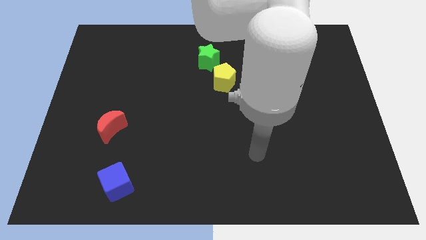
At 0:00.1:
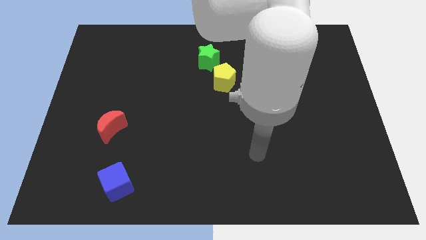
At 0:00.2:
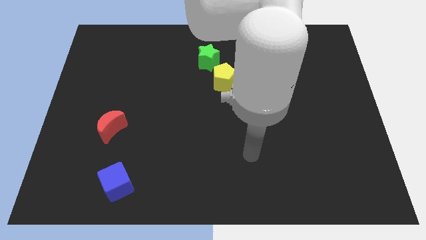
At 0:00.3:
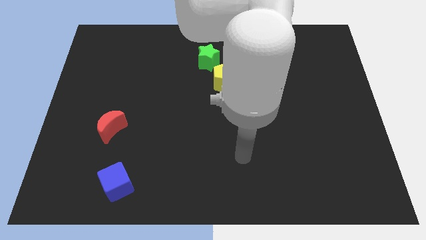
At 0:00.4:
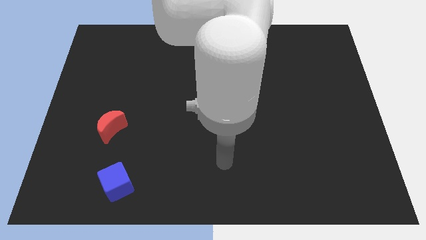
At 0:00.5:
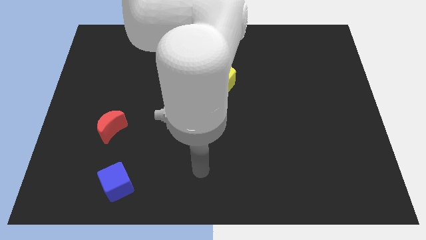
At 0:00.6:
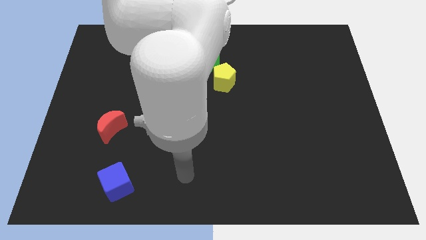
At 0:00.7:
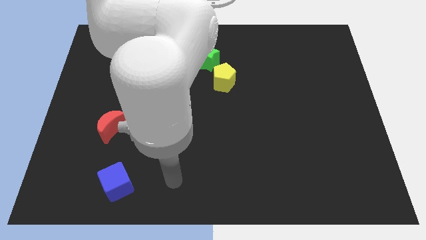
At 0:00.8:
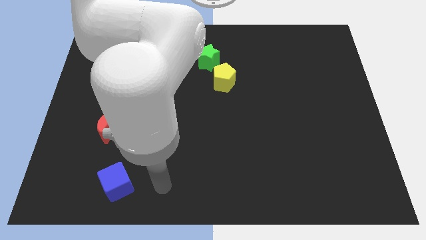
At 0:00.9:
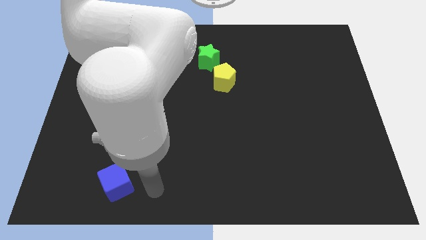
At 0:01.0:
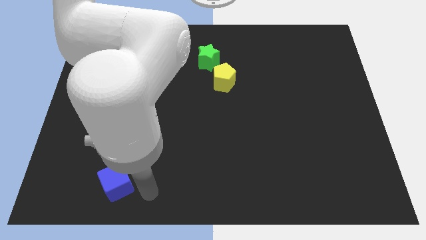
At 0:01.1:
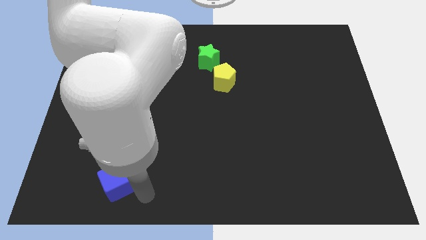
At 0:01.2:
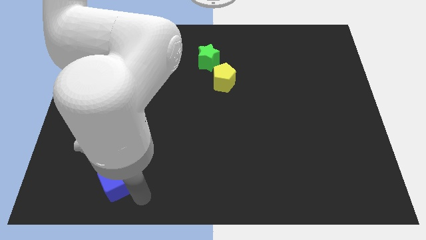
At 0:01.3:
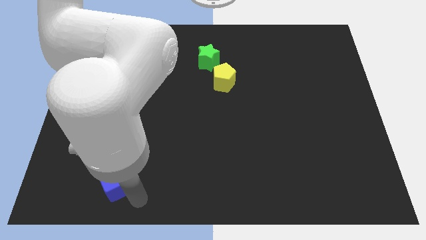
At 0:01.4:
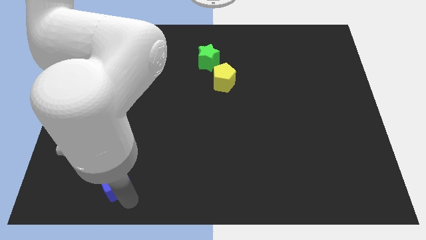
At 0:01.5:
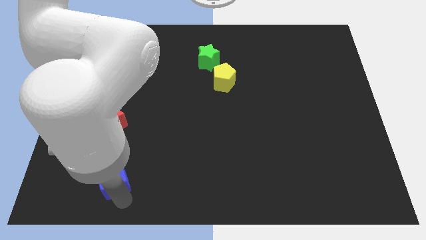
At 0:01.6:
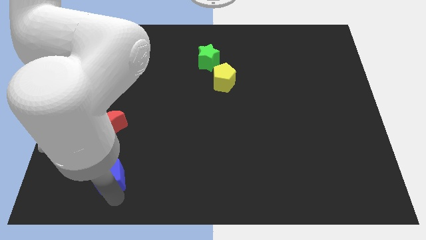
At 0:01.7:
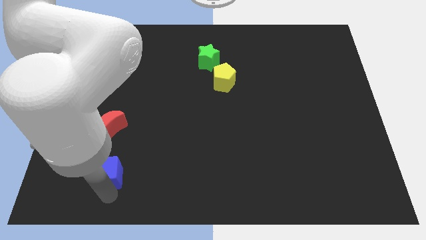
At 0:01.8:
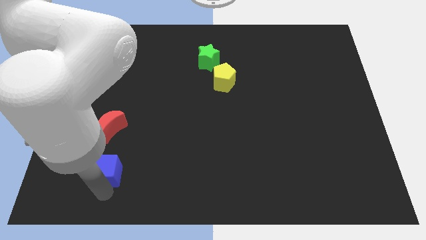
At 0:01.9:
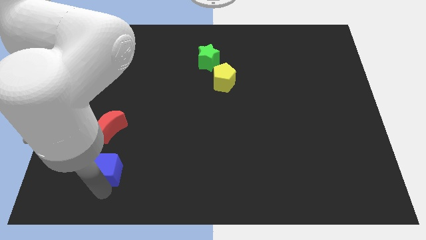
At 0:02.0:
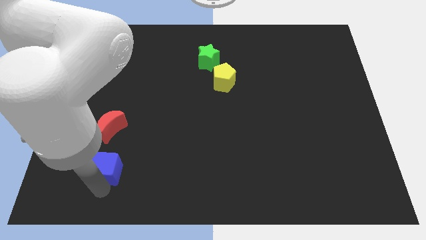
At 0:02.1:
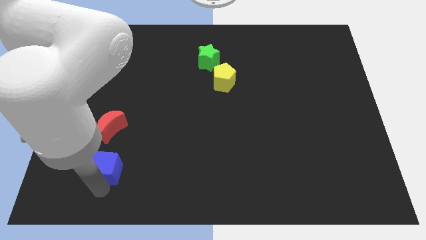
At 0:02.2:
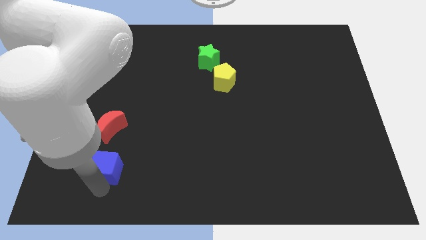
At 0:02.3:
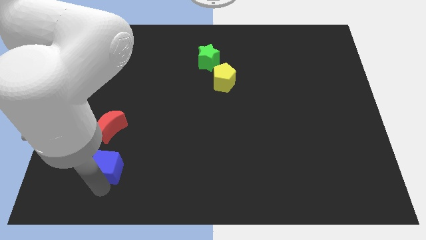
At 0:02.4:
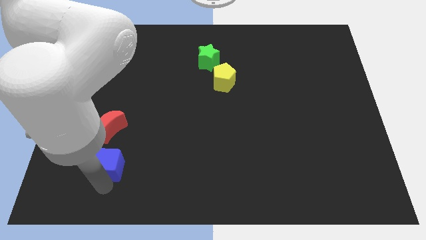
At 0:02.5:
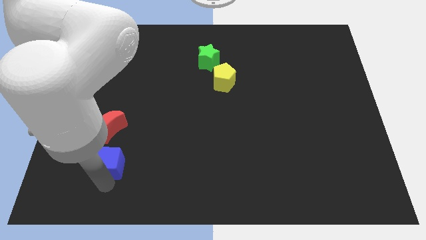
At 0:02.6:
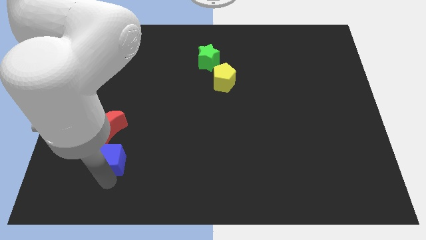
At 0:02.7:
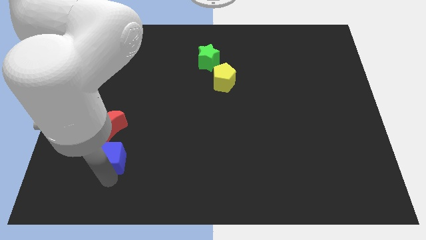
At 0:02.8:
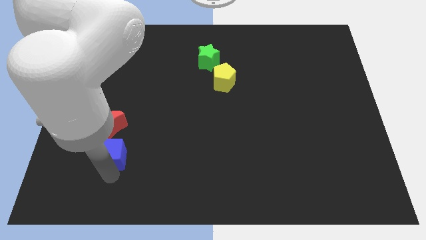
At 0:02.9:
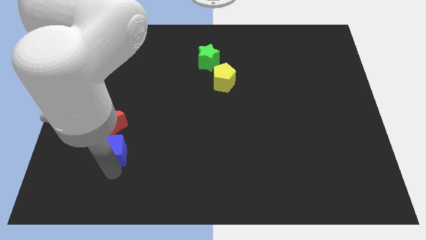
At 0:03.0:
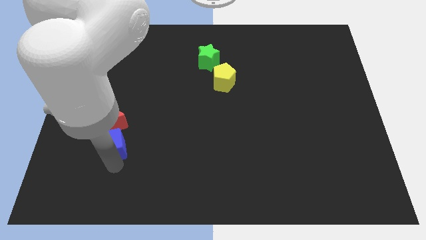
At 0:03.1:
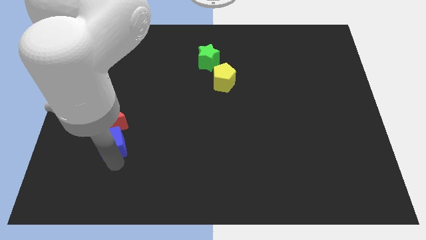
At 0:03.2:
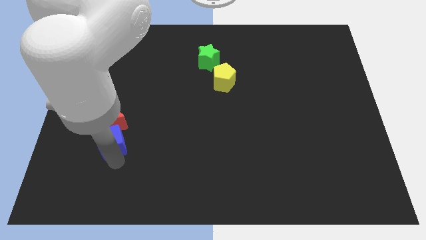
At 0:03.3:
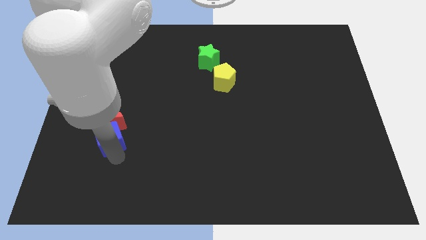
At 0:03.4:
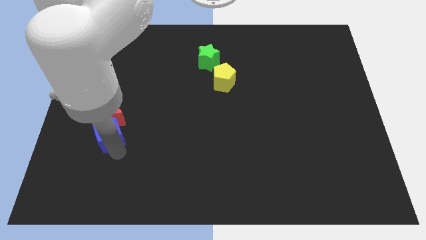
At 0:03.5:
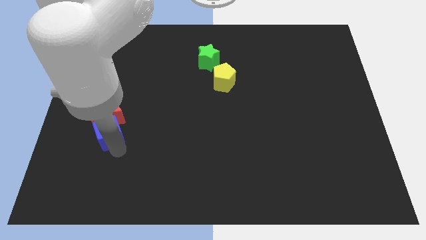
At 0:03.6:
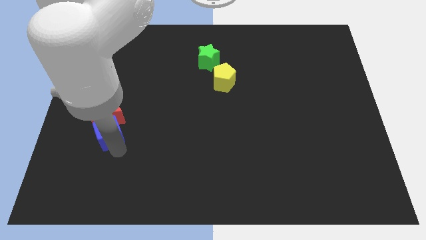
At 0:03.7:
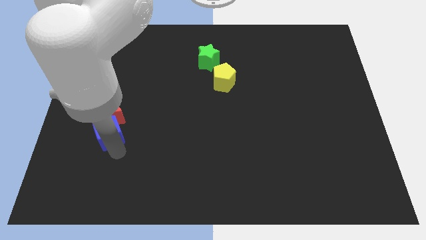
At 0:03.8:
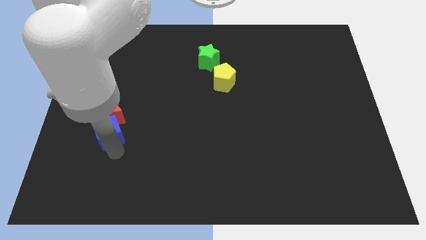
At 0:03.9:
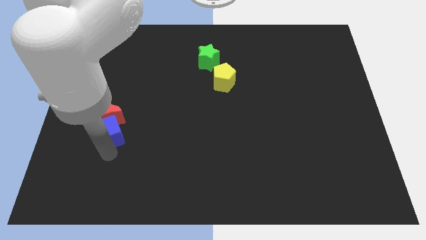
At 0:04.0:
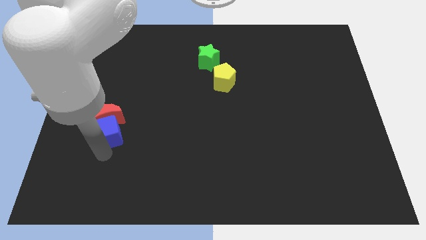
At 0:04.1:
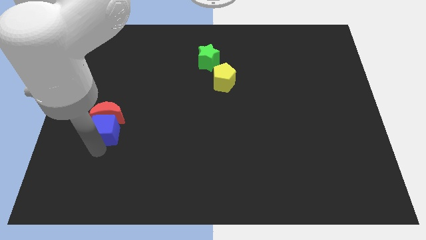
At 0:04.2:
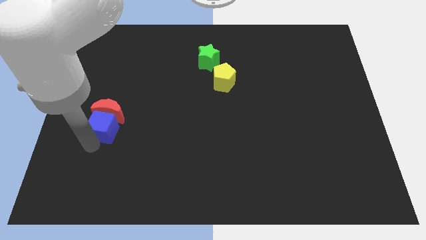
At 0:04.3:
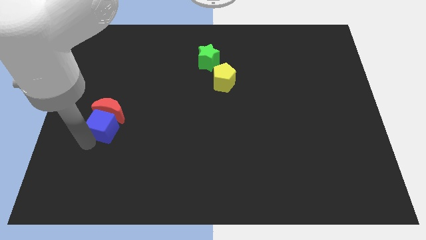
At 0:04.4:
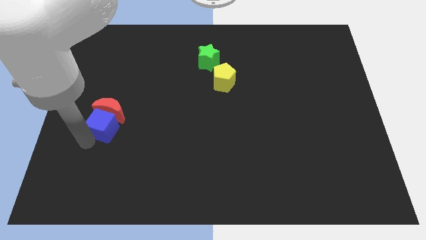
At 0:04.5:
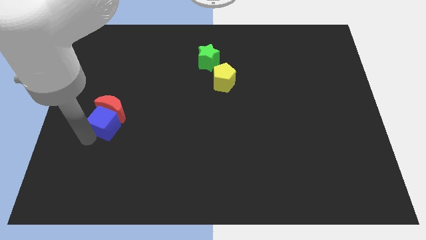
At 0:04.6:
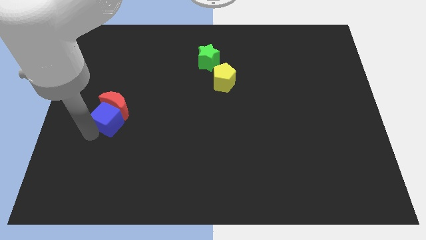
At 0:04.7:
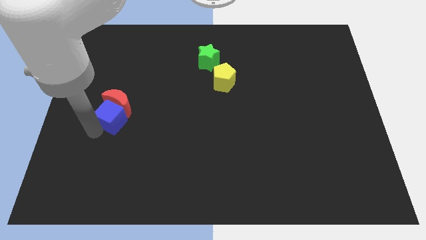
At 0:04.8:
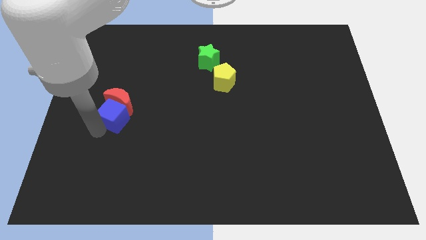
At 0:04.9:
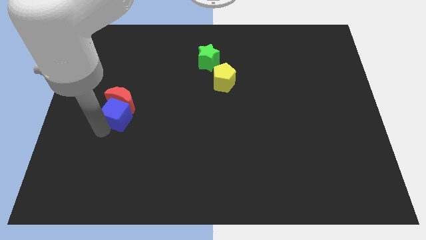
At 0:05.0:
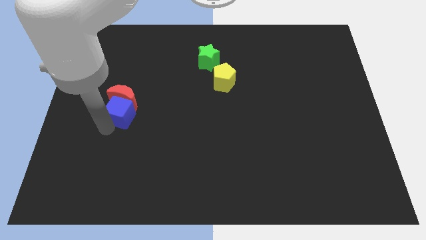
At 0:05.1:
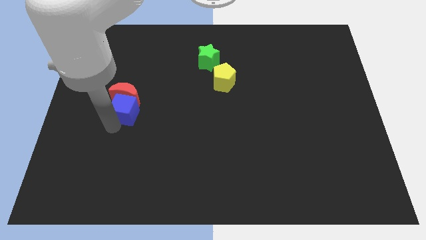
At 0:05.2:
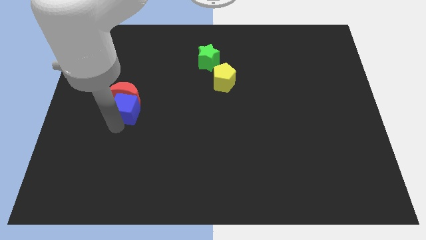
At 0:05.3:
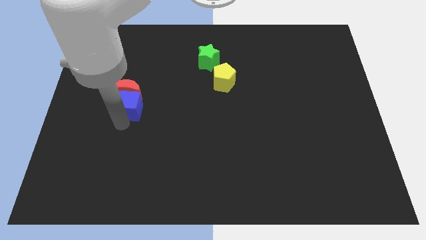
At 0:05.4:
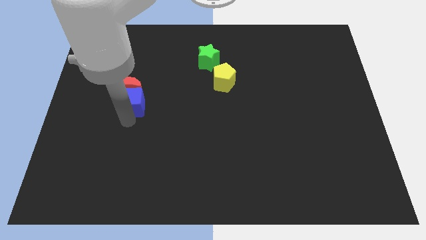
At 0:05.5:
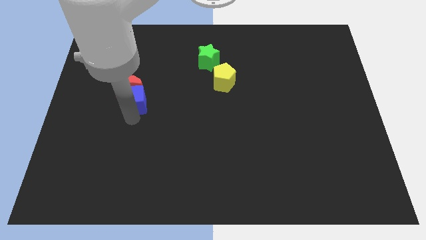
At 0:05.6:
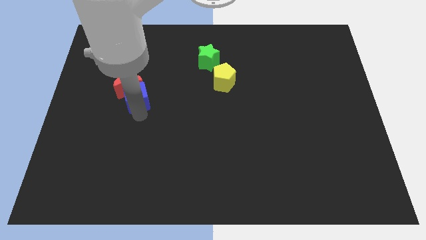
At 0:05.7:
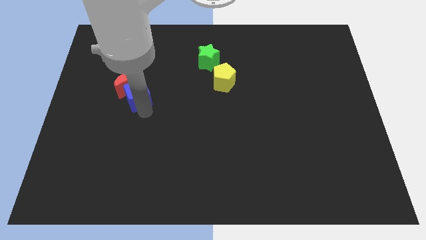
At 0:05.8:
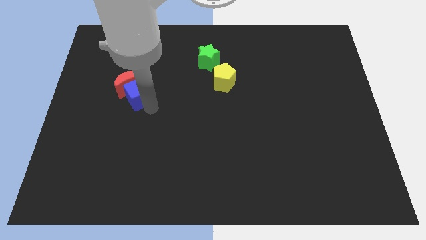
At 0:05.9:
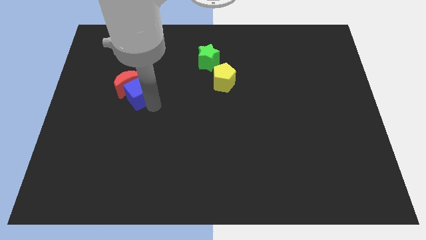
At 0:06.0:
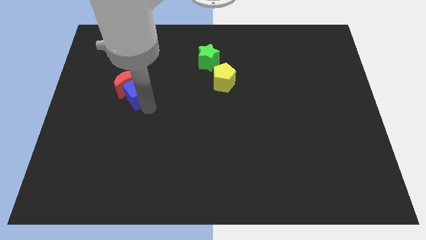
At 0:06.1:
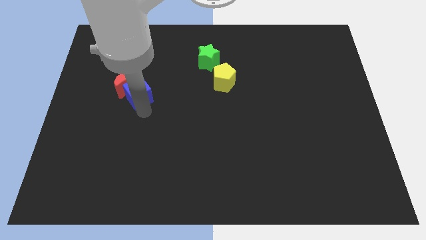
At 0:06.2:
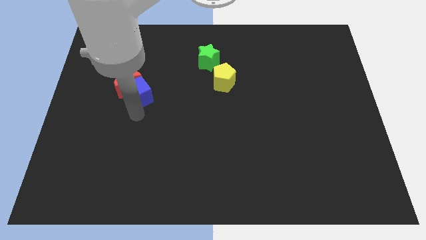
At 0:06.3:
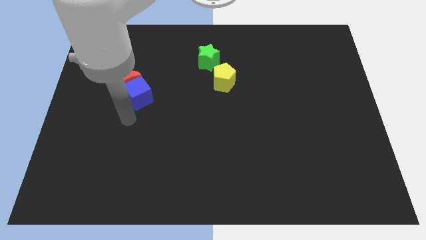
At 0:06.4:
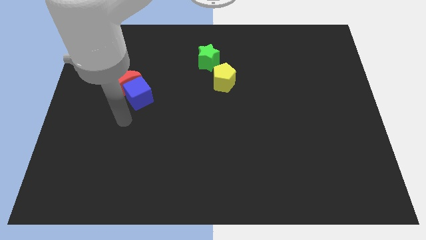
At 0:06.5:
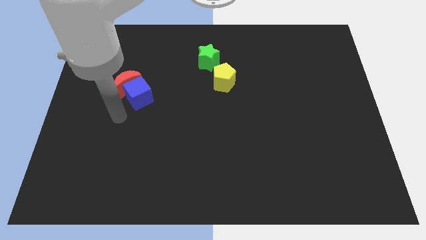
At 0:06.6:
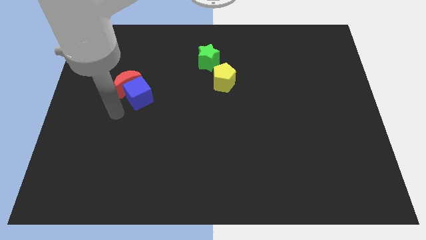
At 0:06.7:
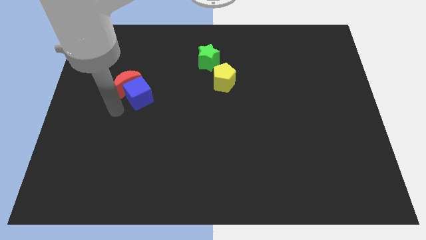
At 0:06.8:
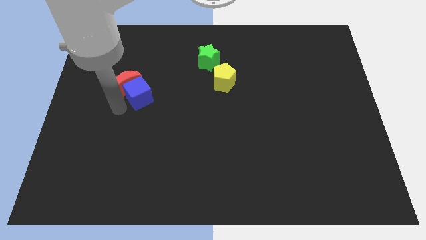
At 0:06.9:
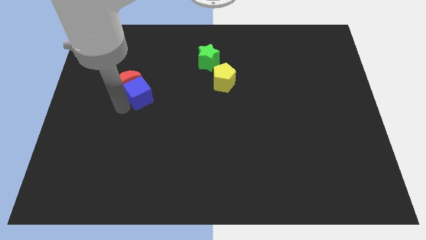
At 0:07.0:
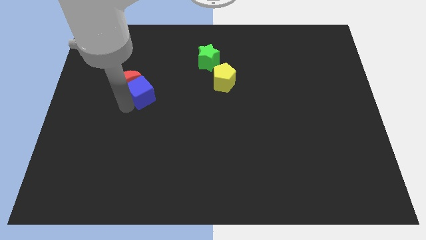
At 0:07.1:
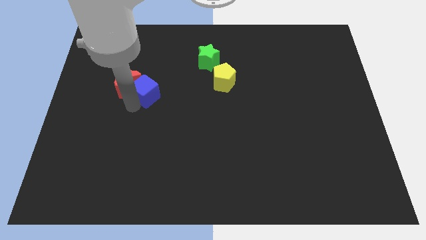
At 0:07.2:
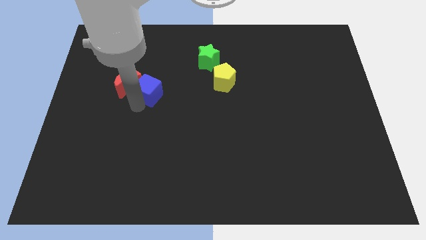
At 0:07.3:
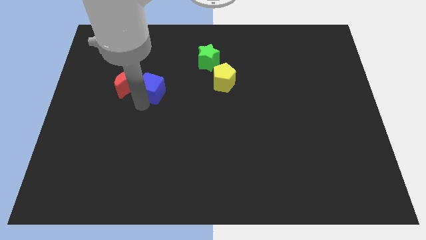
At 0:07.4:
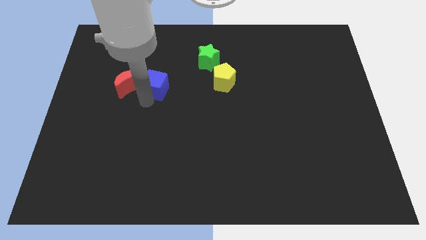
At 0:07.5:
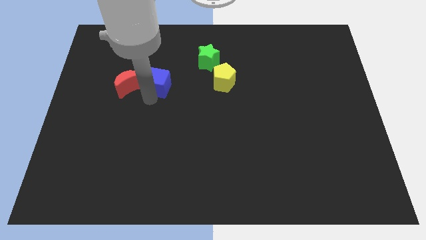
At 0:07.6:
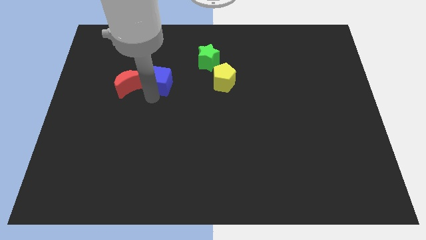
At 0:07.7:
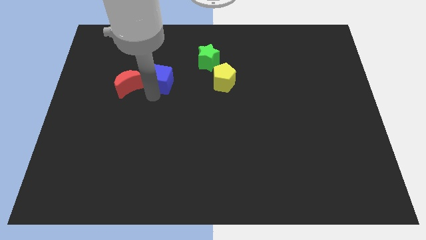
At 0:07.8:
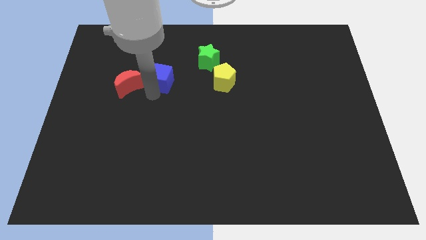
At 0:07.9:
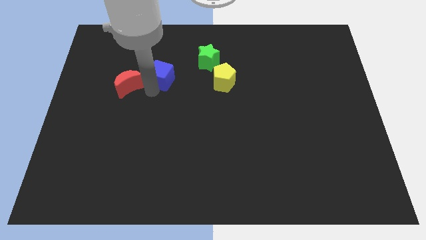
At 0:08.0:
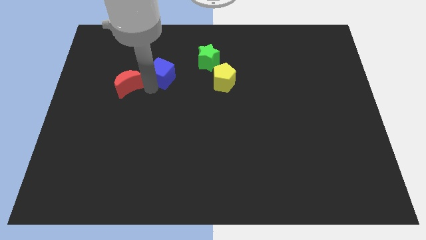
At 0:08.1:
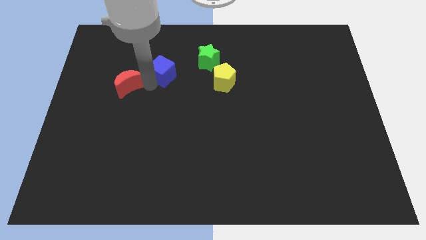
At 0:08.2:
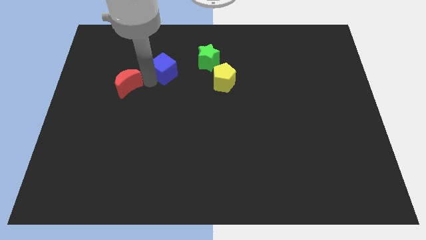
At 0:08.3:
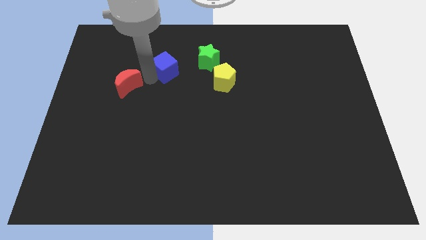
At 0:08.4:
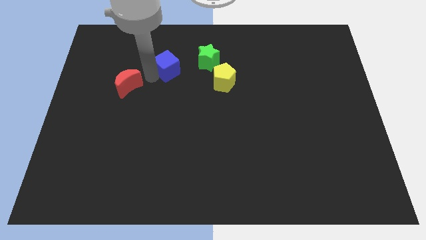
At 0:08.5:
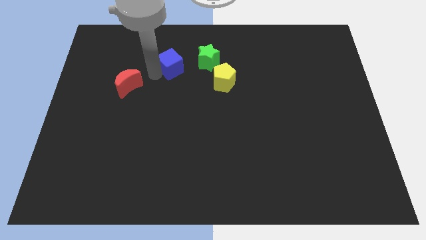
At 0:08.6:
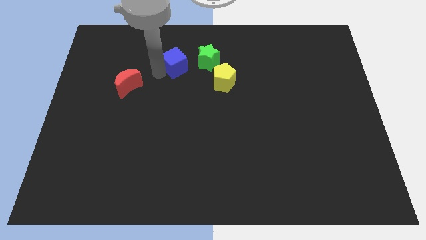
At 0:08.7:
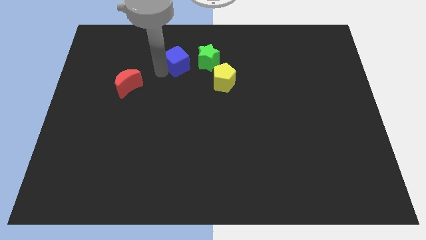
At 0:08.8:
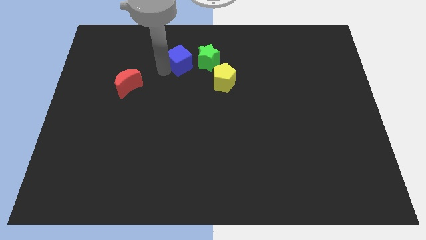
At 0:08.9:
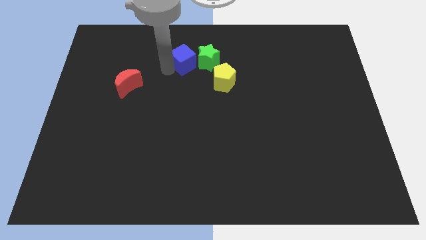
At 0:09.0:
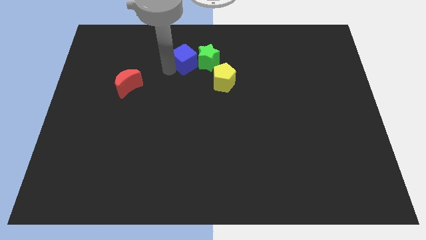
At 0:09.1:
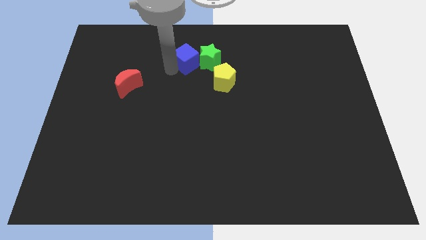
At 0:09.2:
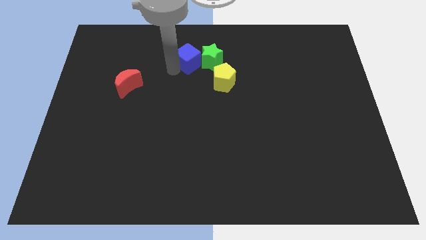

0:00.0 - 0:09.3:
push the blue cube to the green block
